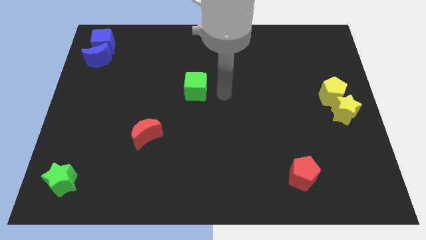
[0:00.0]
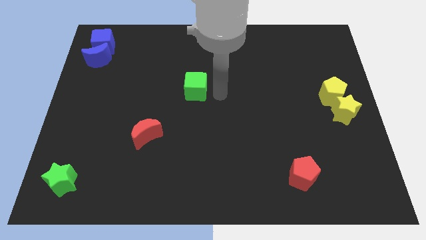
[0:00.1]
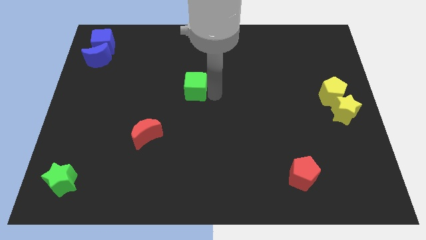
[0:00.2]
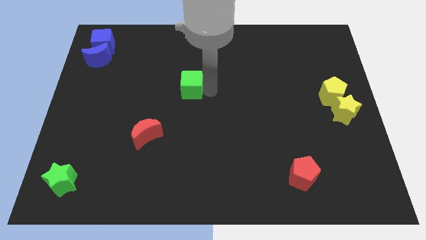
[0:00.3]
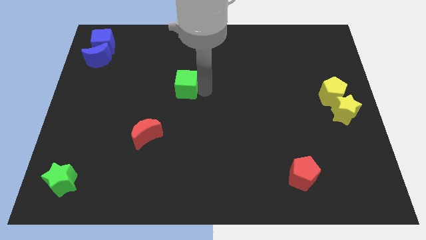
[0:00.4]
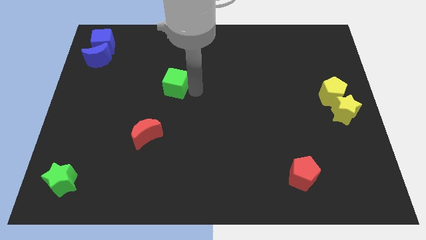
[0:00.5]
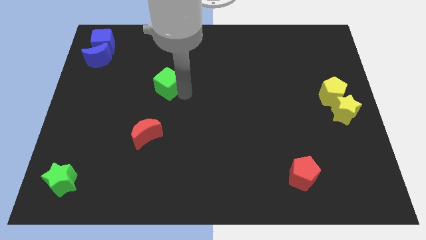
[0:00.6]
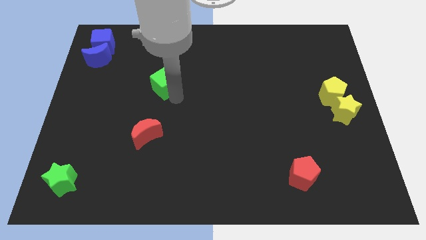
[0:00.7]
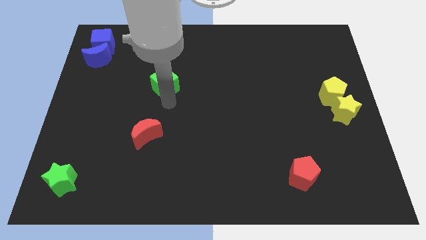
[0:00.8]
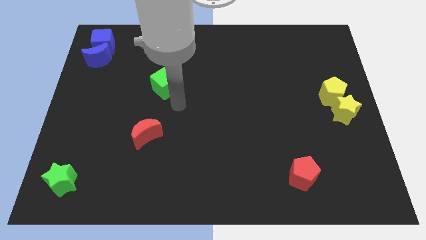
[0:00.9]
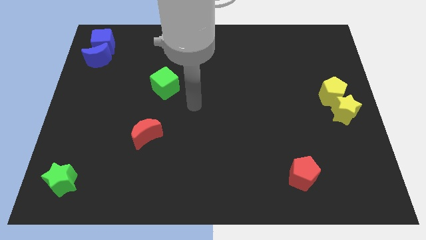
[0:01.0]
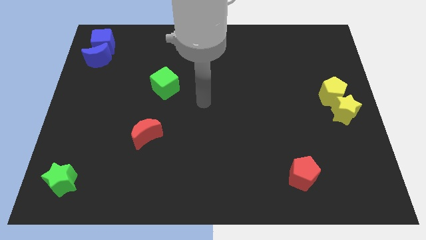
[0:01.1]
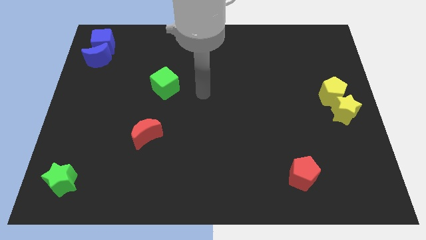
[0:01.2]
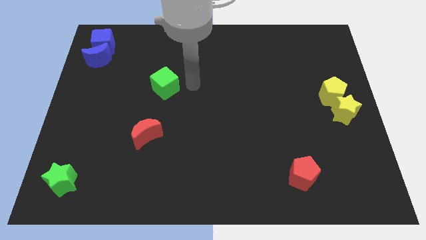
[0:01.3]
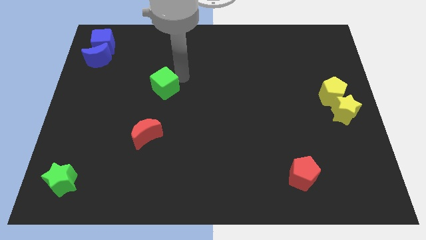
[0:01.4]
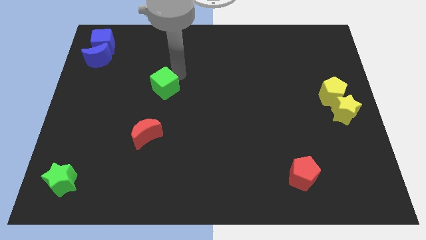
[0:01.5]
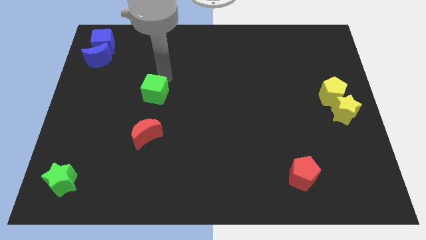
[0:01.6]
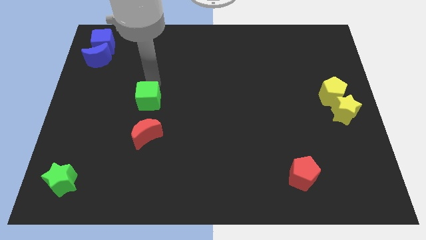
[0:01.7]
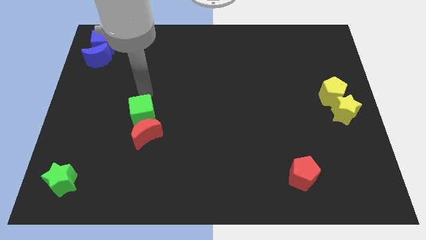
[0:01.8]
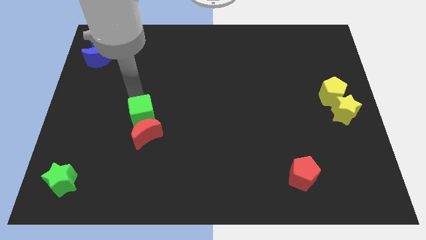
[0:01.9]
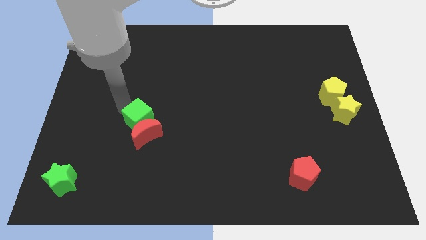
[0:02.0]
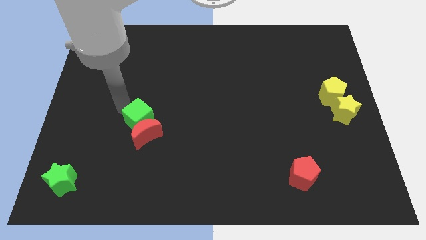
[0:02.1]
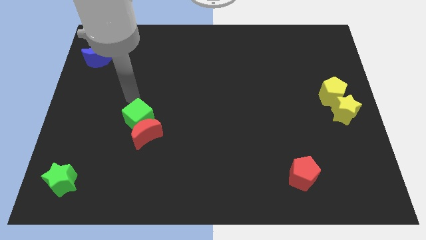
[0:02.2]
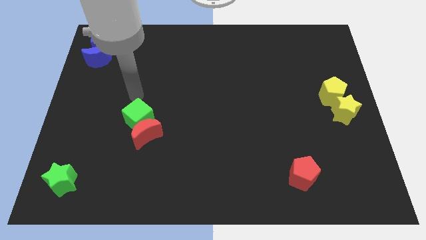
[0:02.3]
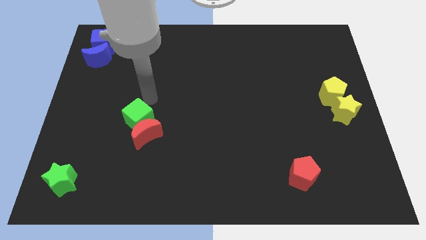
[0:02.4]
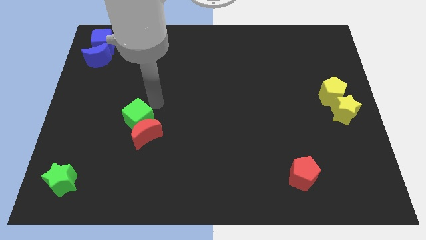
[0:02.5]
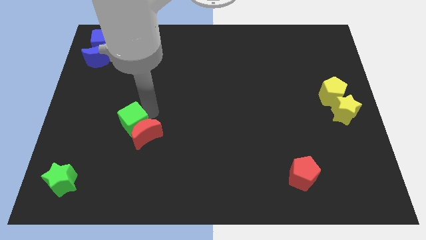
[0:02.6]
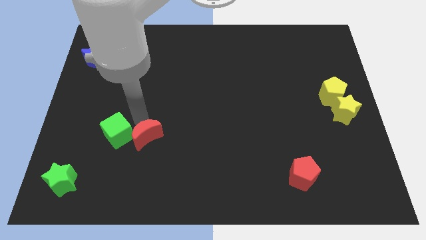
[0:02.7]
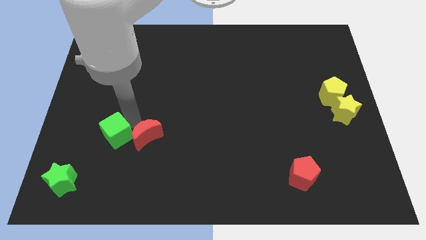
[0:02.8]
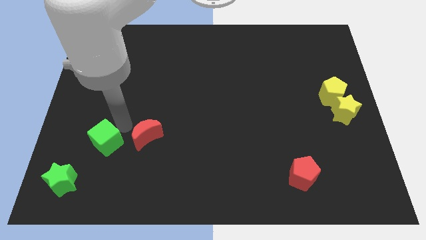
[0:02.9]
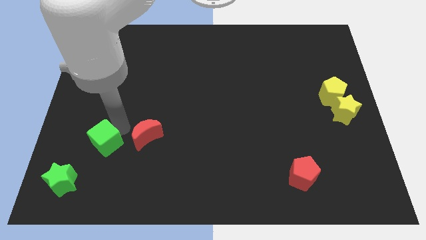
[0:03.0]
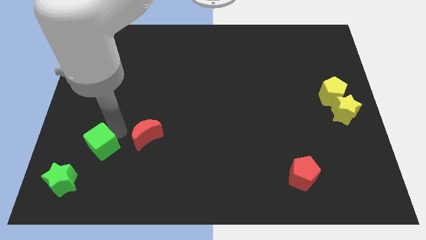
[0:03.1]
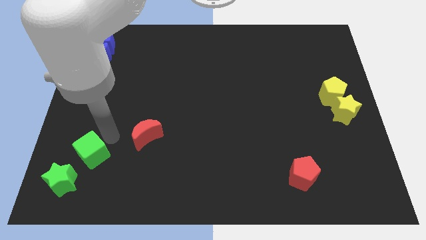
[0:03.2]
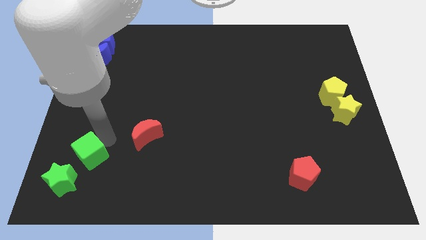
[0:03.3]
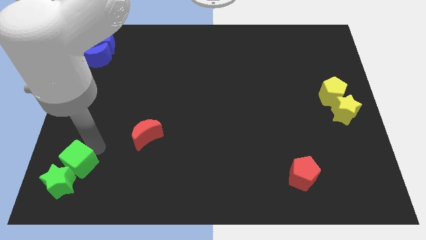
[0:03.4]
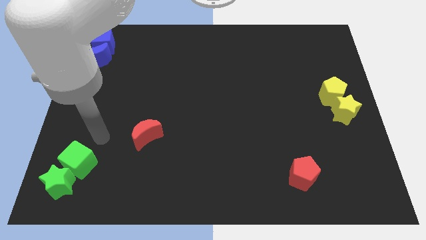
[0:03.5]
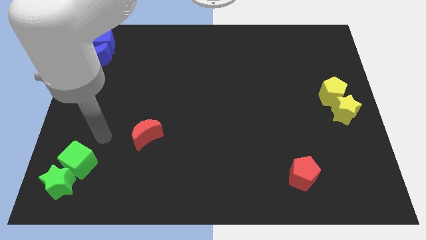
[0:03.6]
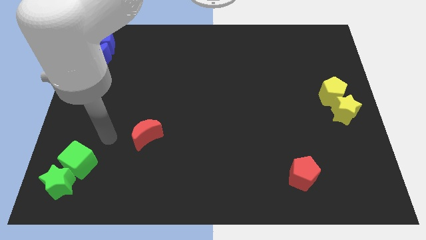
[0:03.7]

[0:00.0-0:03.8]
push the green cube diagonally into the top right of the green star

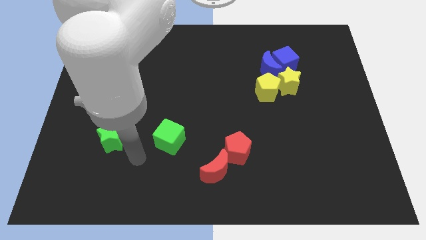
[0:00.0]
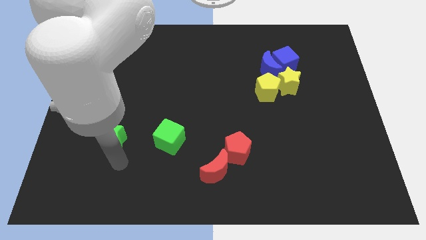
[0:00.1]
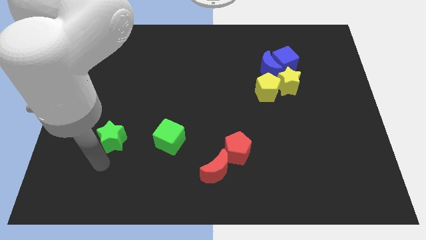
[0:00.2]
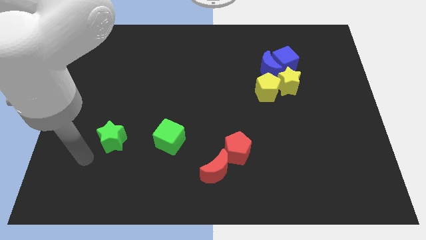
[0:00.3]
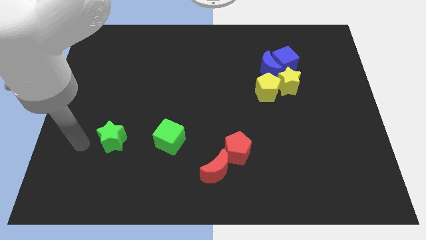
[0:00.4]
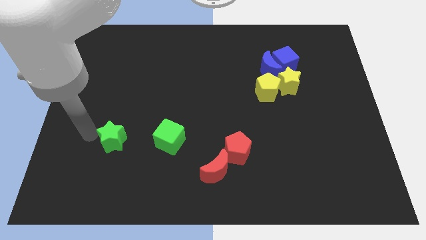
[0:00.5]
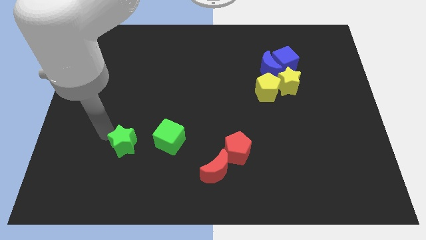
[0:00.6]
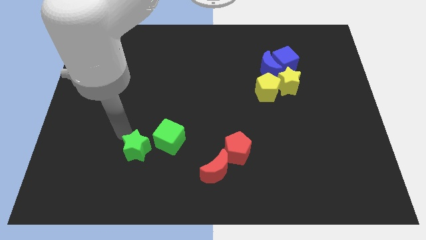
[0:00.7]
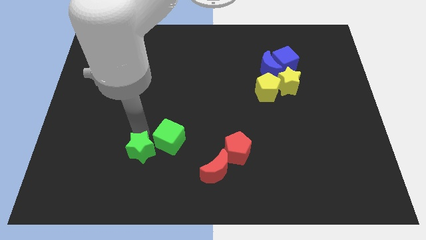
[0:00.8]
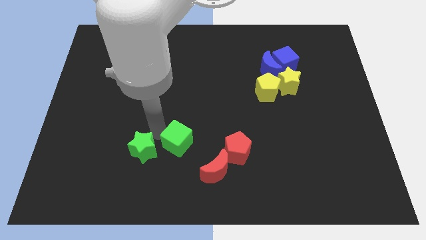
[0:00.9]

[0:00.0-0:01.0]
move the green star slightly to the right

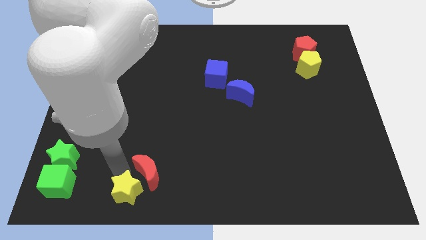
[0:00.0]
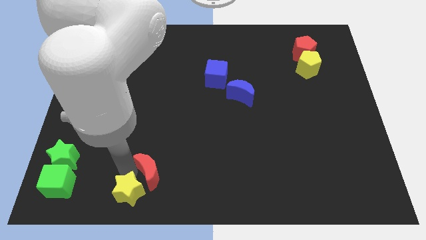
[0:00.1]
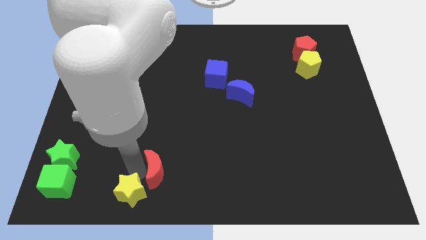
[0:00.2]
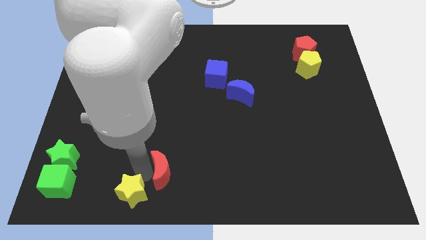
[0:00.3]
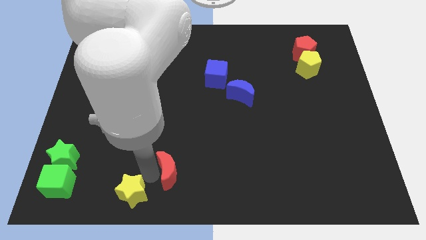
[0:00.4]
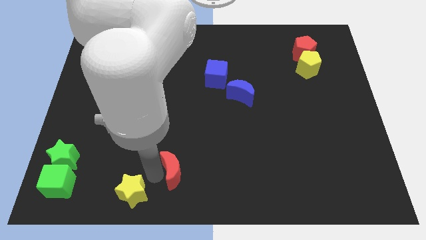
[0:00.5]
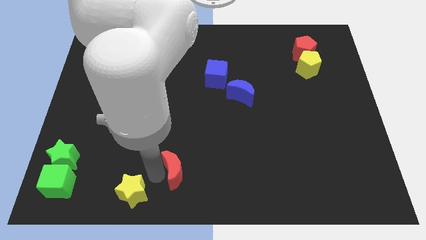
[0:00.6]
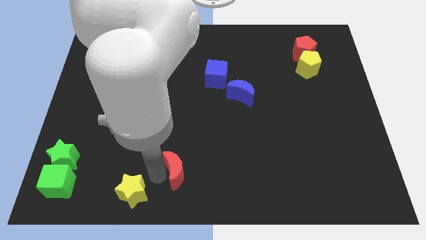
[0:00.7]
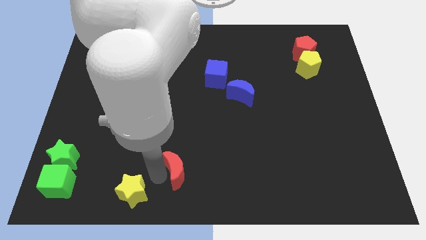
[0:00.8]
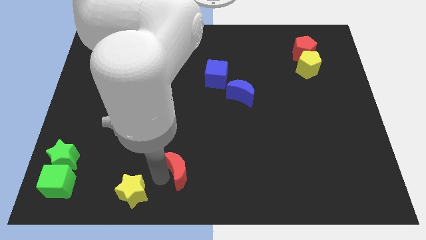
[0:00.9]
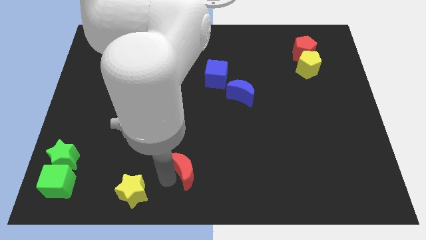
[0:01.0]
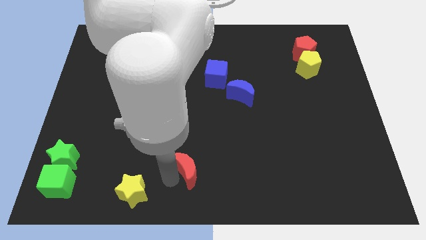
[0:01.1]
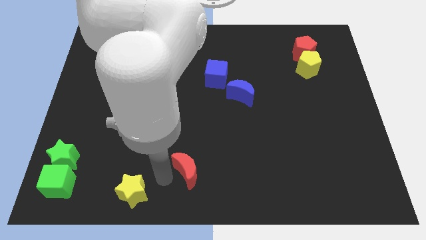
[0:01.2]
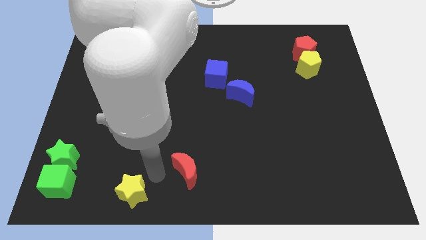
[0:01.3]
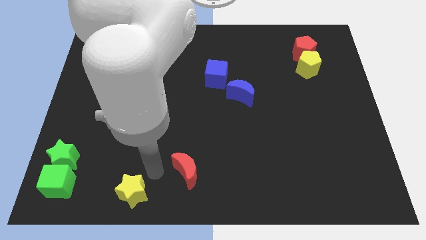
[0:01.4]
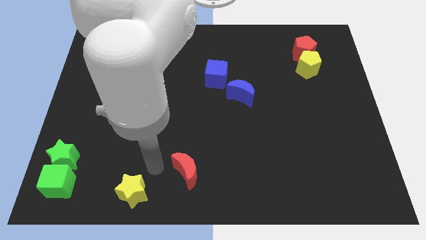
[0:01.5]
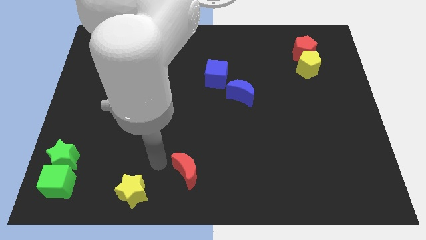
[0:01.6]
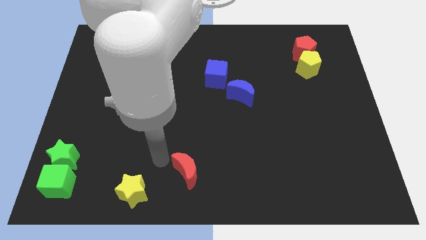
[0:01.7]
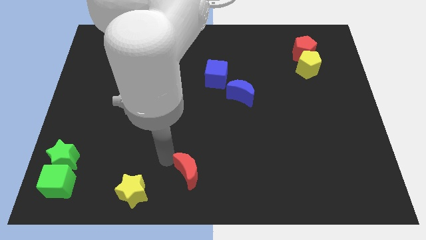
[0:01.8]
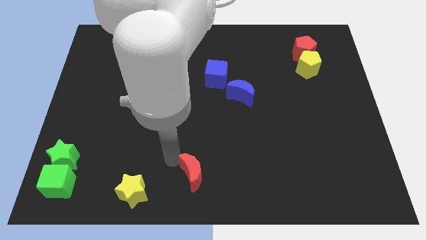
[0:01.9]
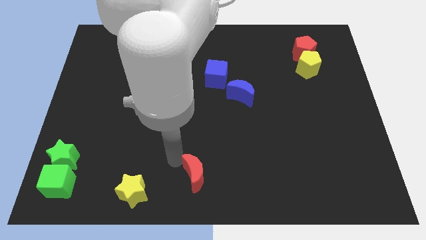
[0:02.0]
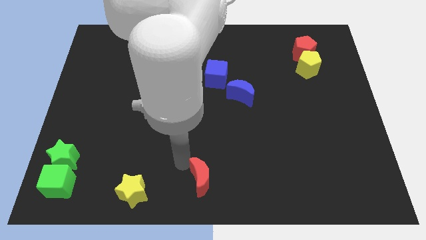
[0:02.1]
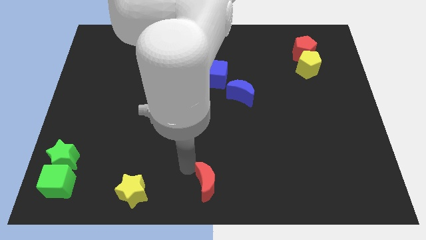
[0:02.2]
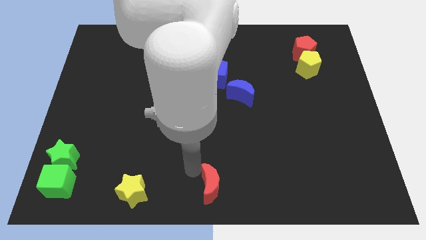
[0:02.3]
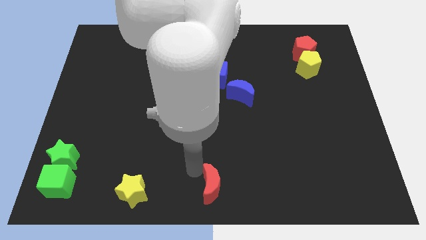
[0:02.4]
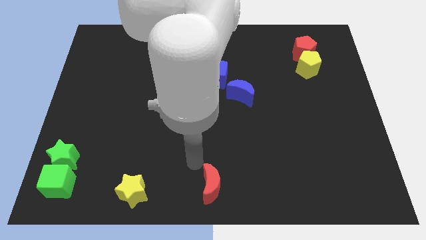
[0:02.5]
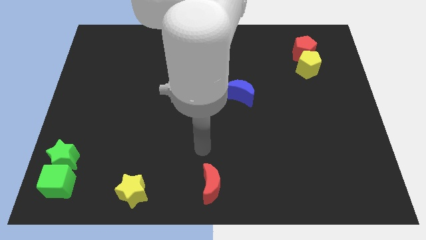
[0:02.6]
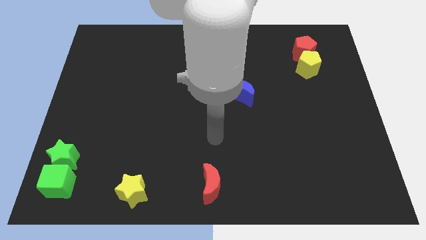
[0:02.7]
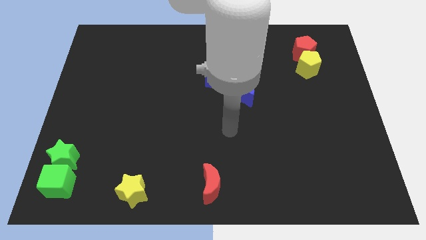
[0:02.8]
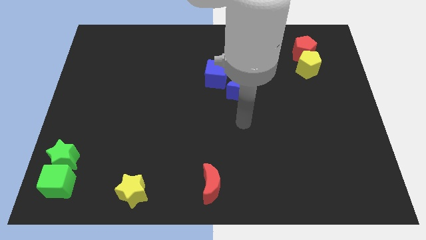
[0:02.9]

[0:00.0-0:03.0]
place the red crescent at bottom center of the board

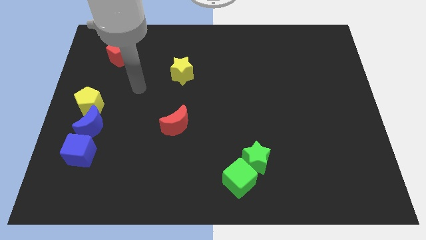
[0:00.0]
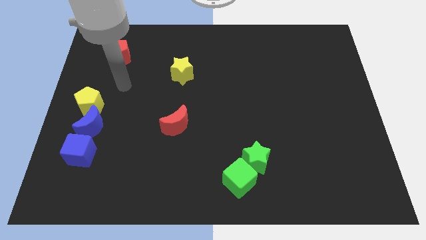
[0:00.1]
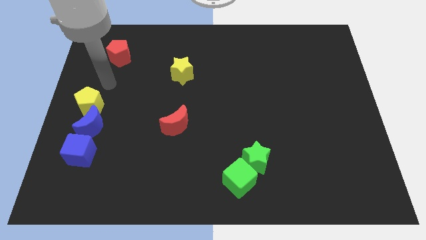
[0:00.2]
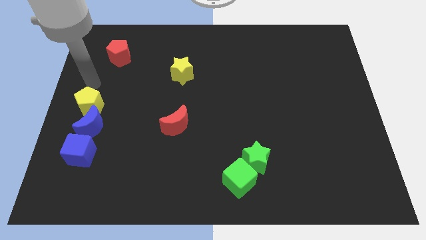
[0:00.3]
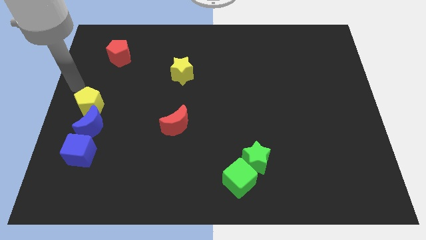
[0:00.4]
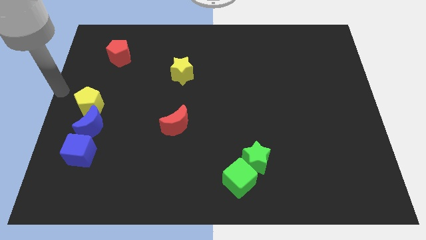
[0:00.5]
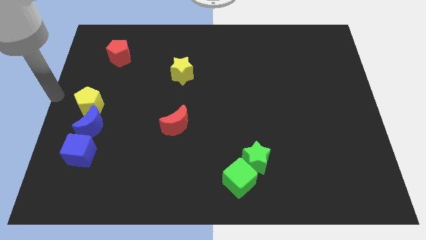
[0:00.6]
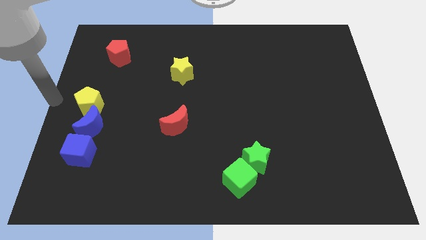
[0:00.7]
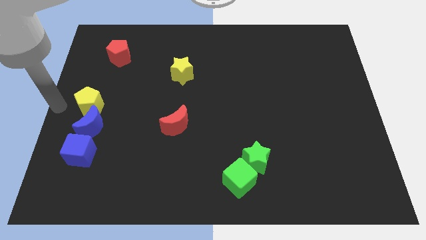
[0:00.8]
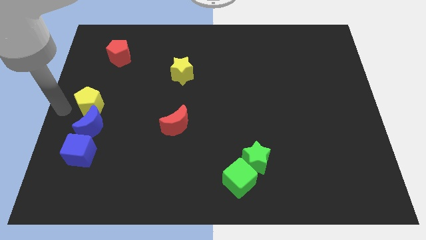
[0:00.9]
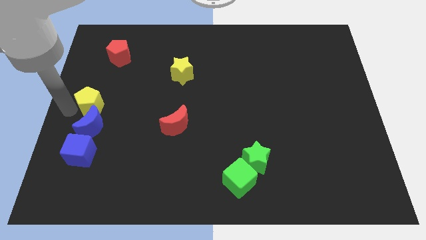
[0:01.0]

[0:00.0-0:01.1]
place your arm at the center left

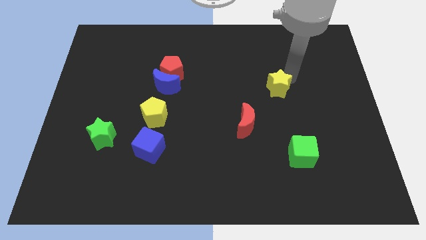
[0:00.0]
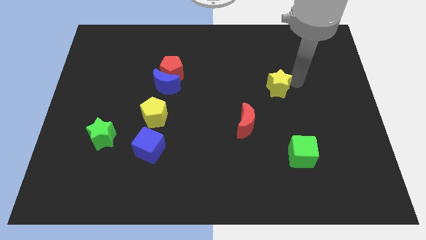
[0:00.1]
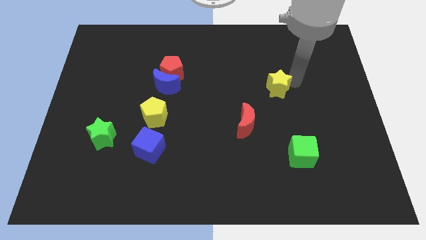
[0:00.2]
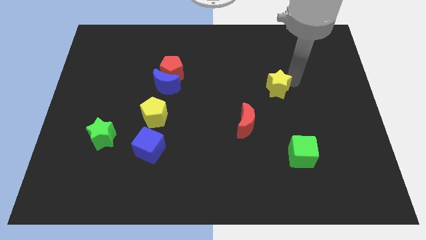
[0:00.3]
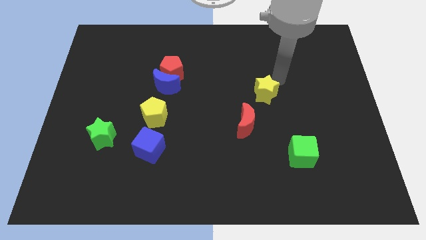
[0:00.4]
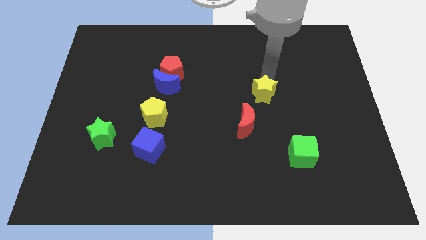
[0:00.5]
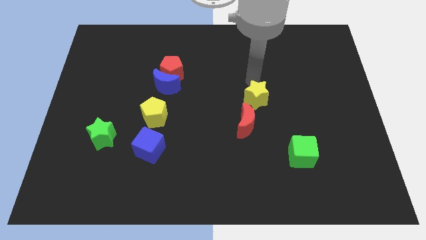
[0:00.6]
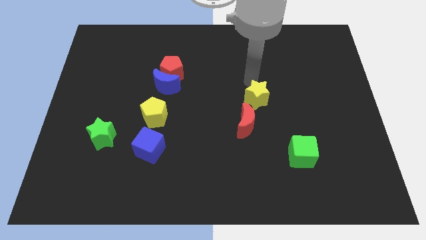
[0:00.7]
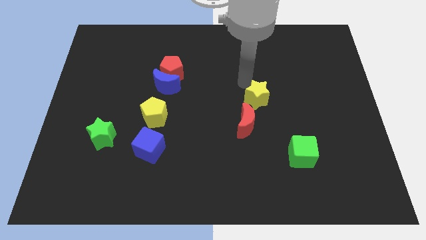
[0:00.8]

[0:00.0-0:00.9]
move the yellow star close to the top side of the red crescent
